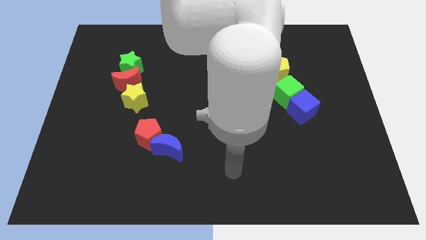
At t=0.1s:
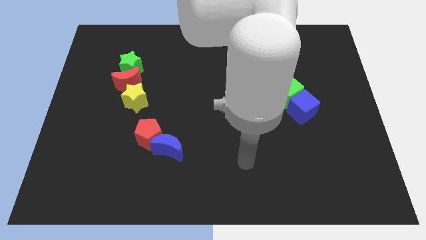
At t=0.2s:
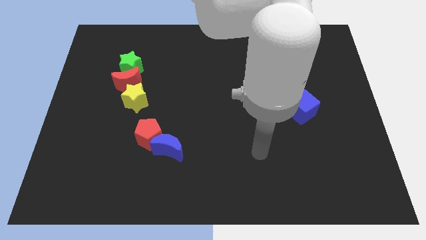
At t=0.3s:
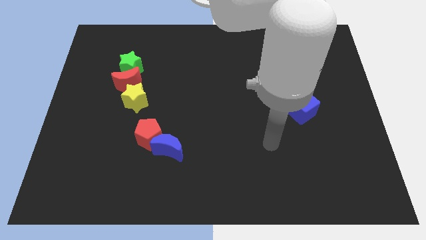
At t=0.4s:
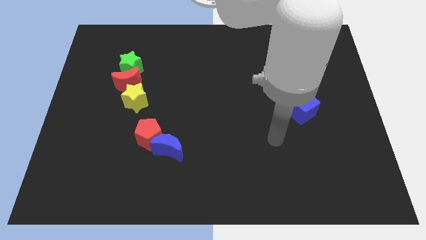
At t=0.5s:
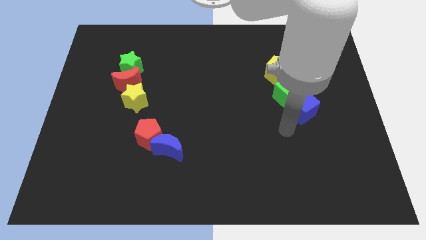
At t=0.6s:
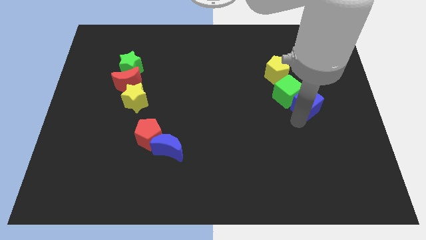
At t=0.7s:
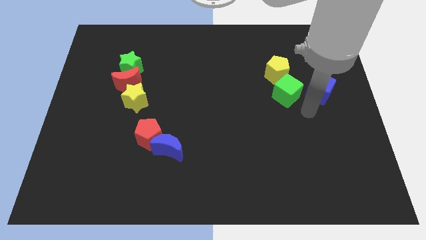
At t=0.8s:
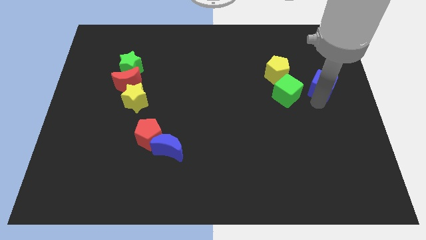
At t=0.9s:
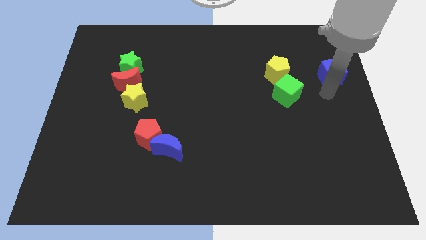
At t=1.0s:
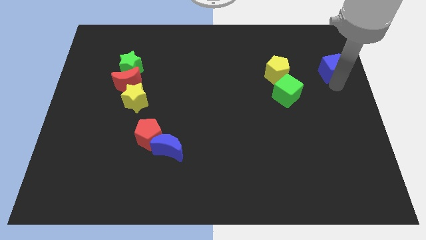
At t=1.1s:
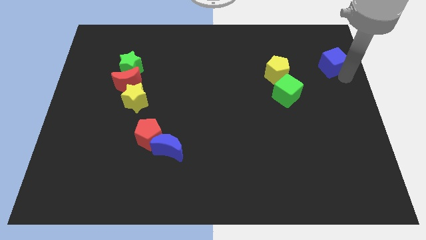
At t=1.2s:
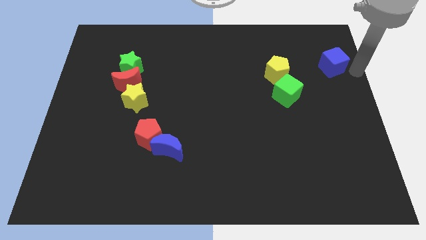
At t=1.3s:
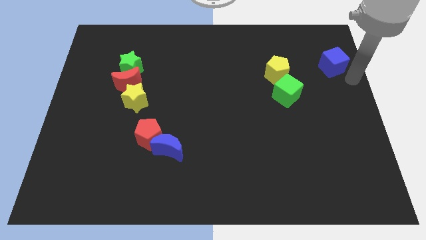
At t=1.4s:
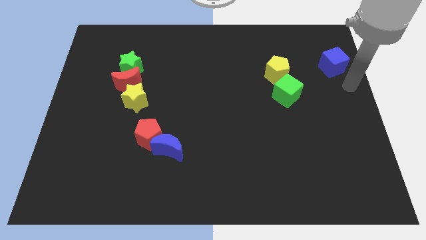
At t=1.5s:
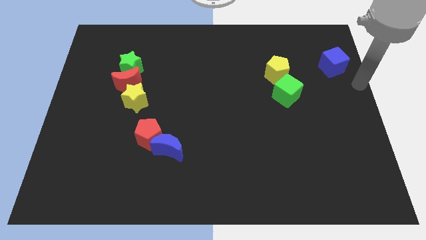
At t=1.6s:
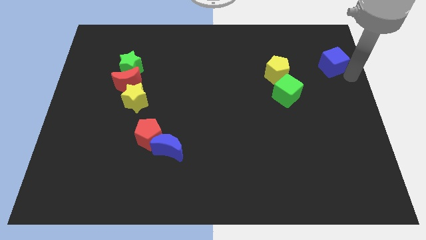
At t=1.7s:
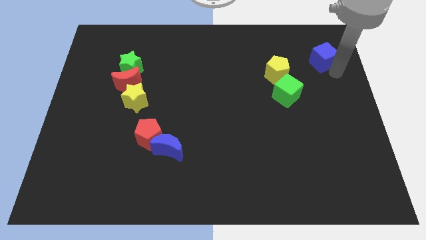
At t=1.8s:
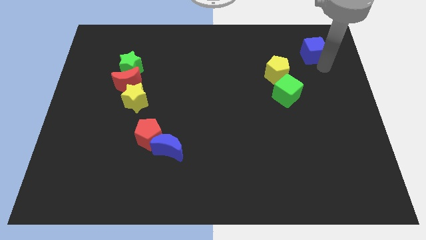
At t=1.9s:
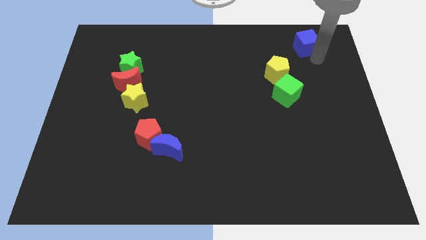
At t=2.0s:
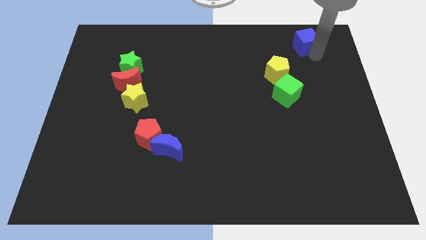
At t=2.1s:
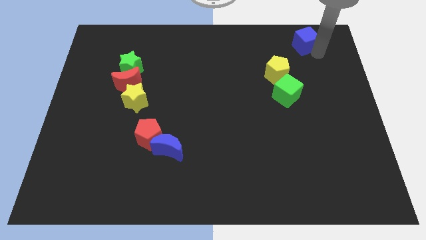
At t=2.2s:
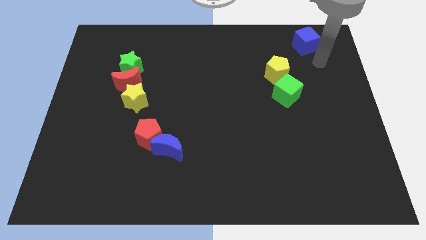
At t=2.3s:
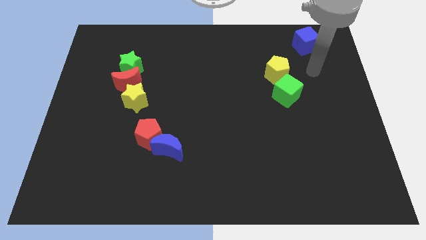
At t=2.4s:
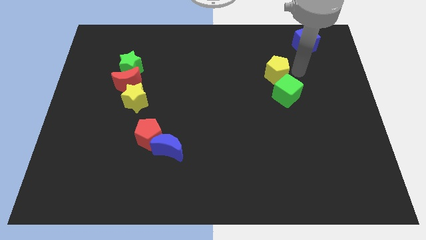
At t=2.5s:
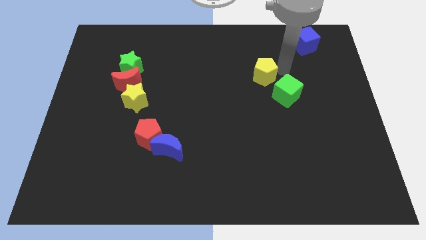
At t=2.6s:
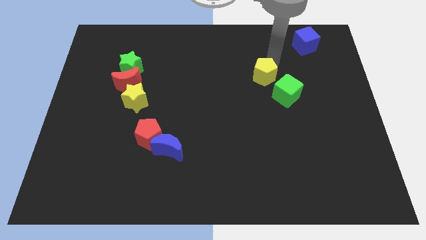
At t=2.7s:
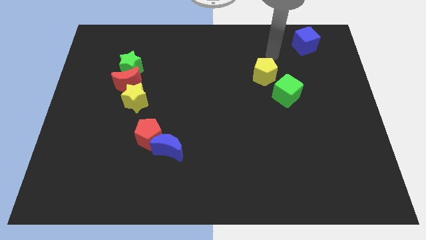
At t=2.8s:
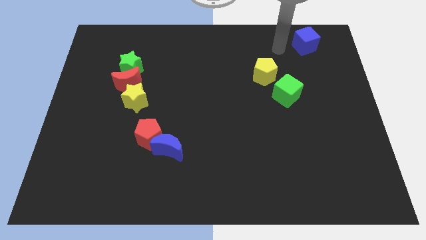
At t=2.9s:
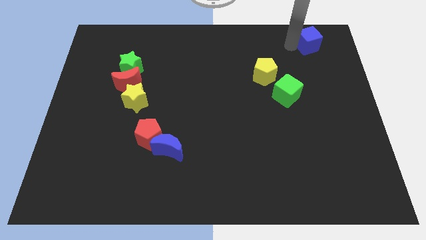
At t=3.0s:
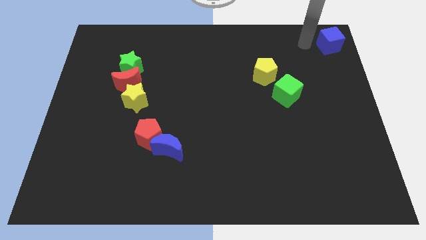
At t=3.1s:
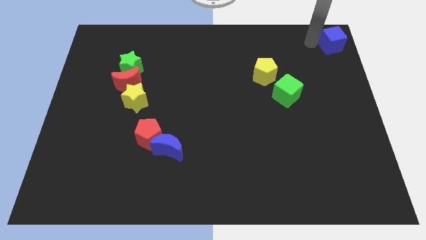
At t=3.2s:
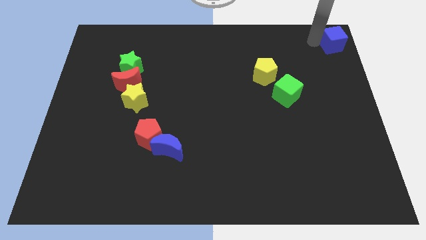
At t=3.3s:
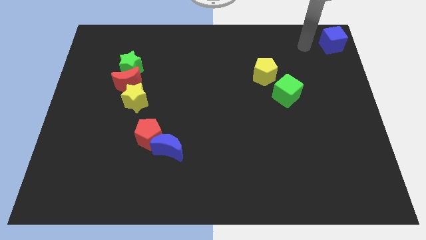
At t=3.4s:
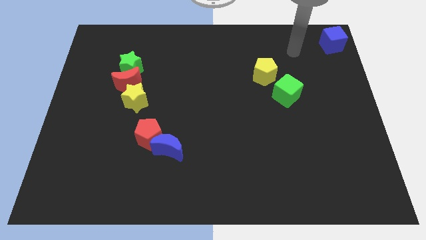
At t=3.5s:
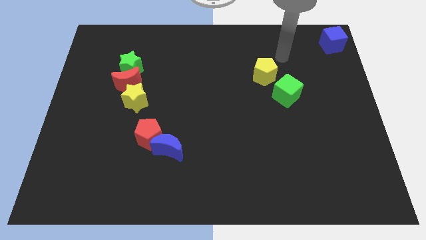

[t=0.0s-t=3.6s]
push the blue cube to the top right side of the board

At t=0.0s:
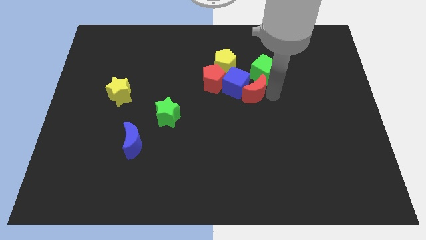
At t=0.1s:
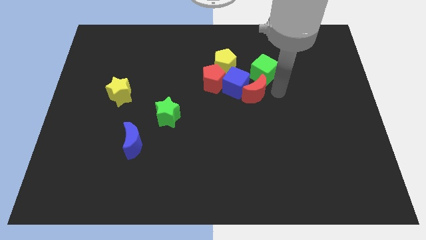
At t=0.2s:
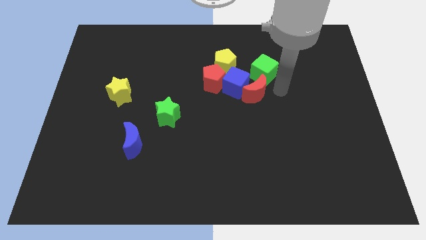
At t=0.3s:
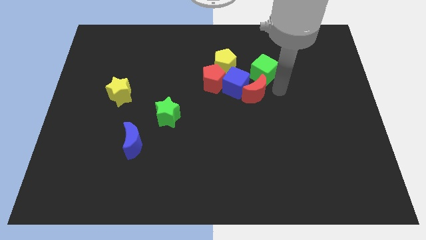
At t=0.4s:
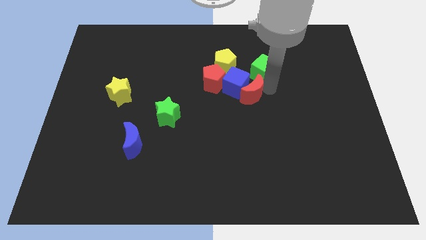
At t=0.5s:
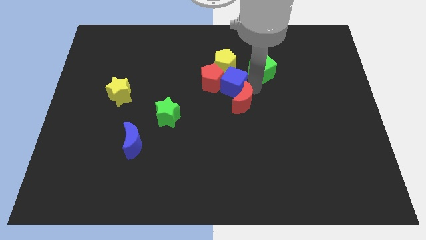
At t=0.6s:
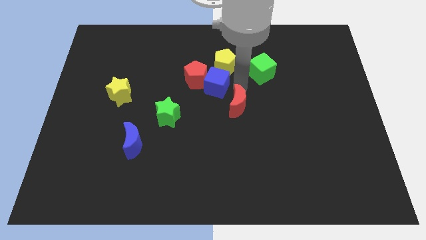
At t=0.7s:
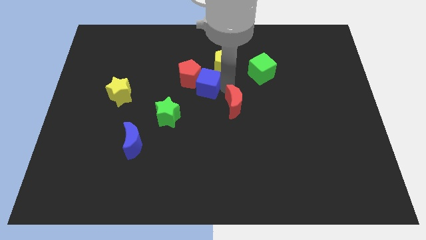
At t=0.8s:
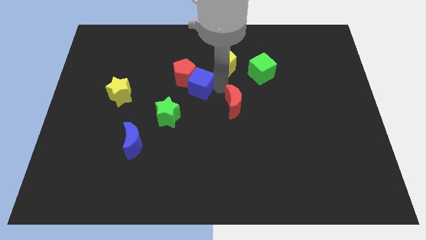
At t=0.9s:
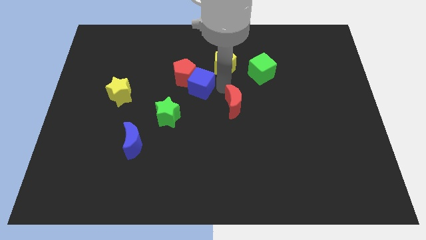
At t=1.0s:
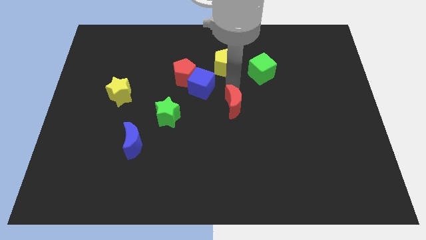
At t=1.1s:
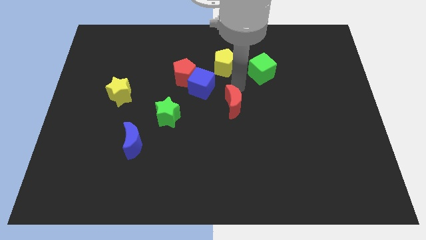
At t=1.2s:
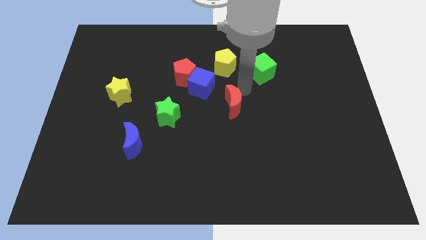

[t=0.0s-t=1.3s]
separate the blue cube and the red moon

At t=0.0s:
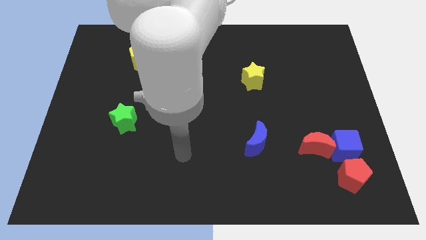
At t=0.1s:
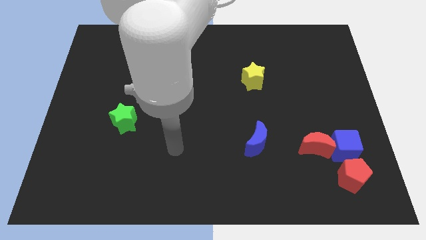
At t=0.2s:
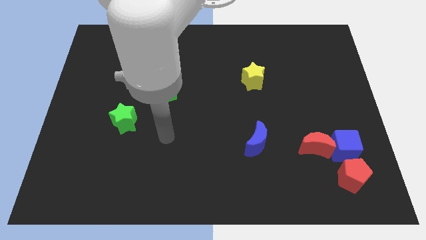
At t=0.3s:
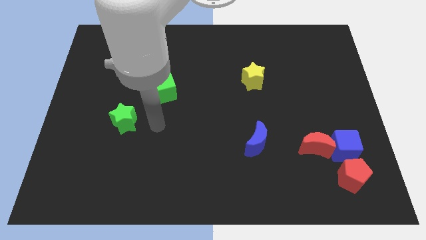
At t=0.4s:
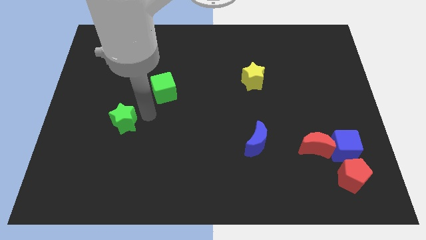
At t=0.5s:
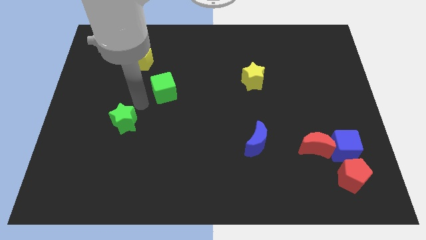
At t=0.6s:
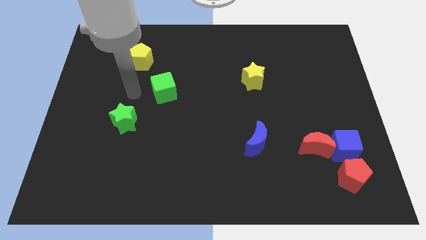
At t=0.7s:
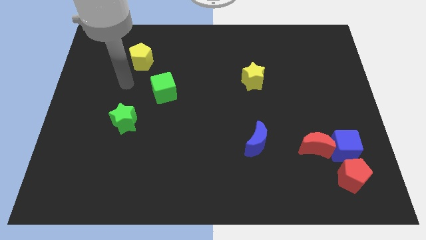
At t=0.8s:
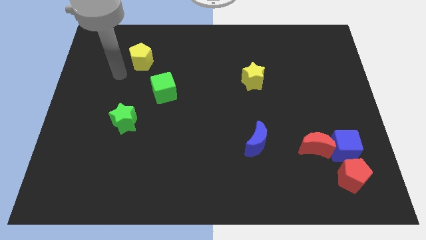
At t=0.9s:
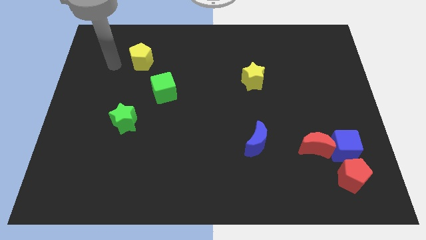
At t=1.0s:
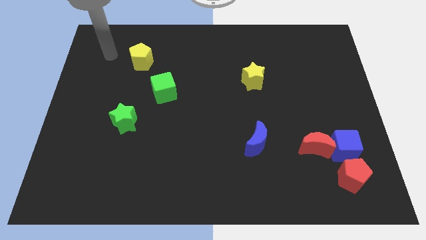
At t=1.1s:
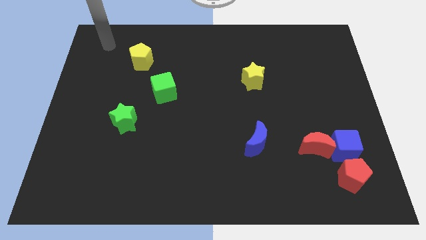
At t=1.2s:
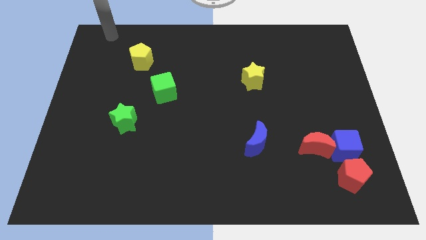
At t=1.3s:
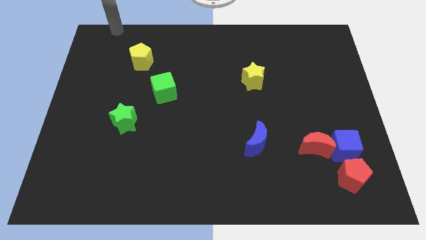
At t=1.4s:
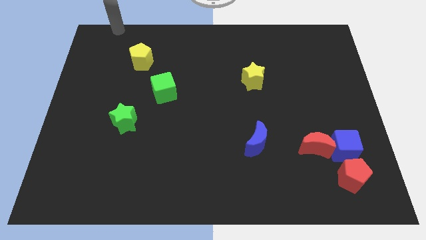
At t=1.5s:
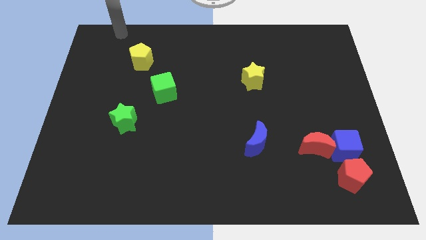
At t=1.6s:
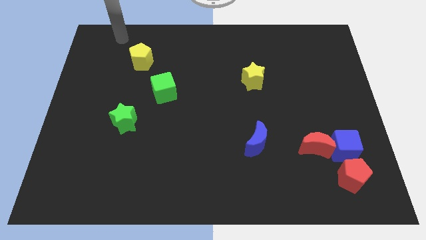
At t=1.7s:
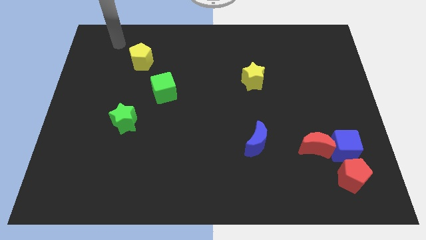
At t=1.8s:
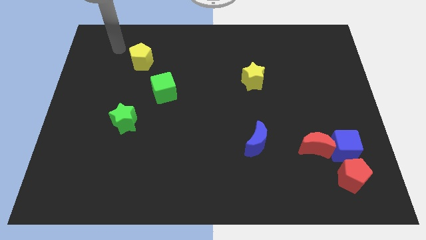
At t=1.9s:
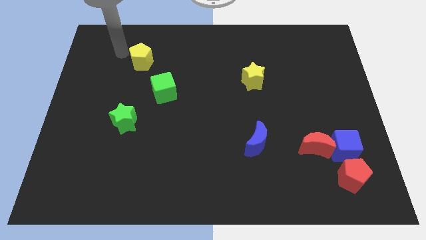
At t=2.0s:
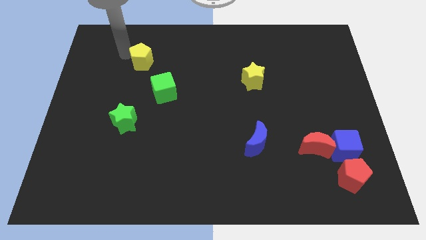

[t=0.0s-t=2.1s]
place the arm left to the yellow pentagon

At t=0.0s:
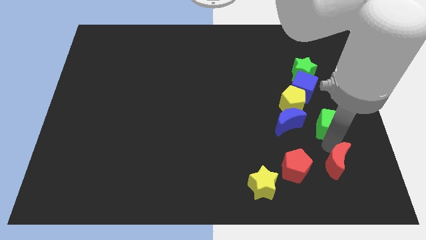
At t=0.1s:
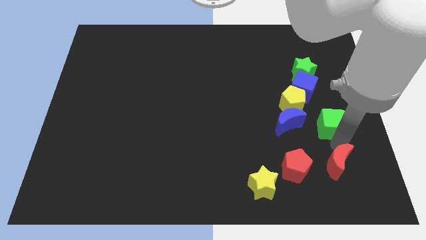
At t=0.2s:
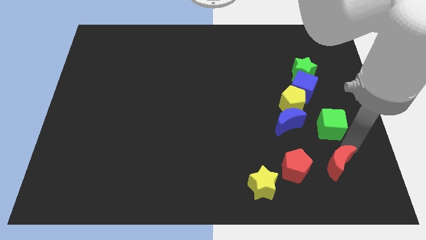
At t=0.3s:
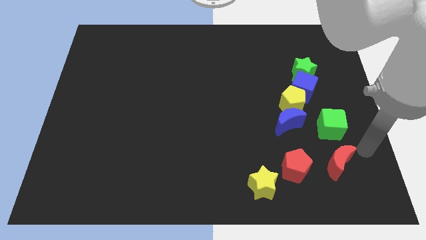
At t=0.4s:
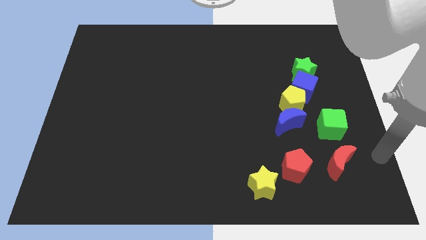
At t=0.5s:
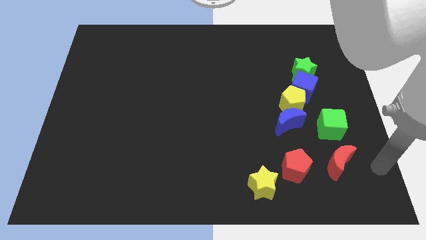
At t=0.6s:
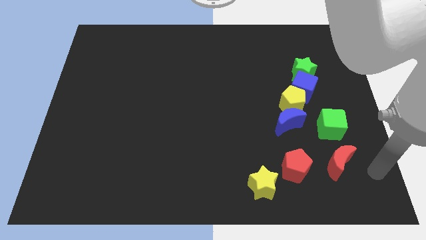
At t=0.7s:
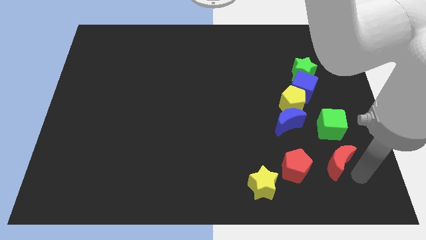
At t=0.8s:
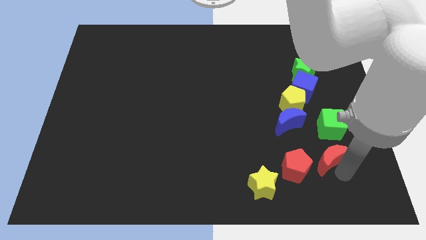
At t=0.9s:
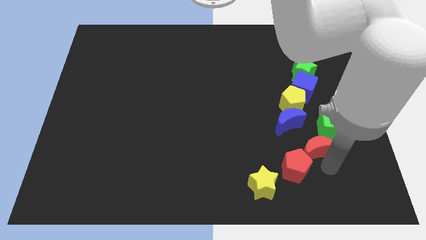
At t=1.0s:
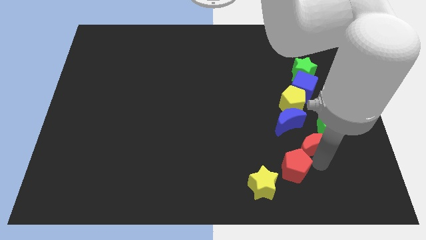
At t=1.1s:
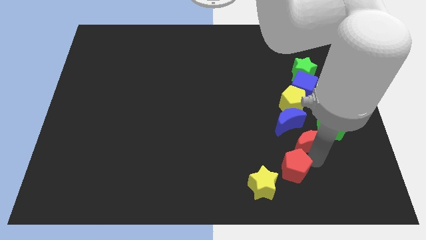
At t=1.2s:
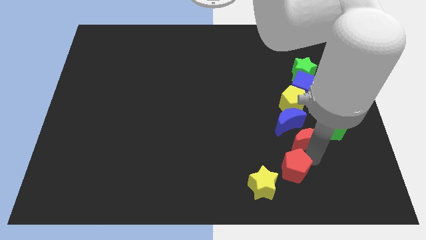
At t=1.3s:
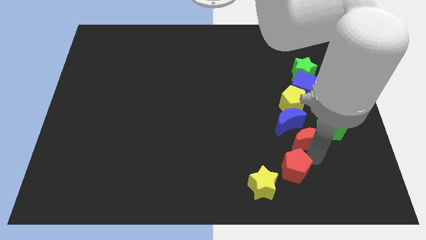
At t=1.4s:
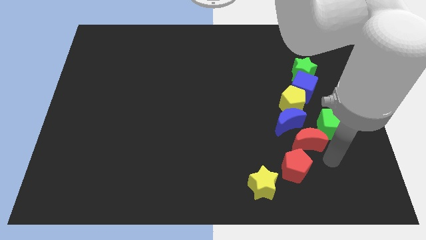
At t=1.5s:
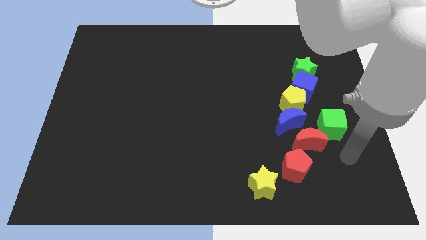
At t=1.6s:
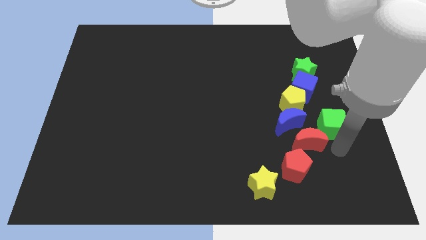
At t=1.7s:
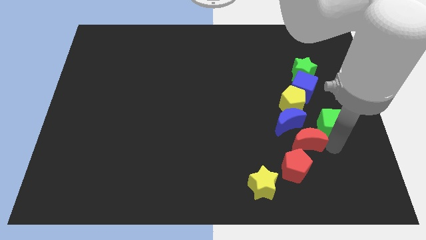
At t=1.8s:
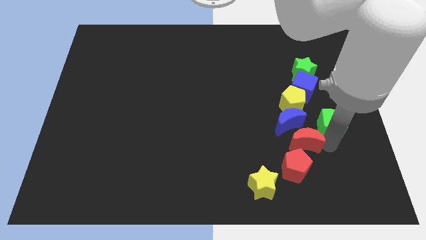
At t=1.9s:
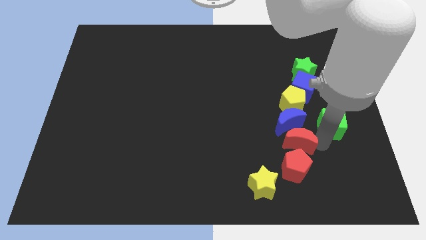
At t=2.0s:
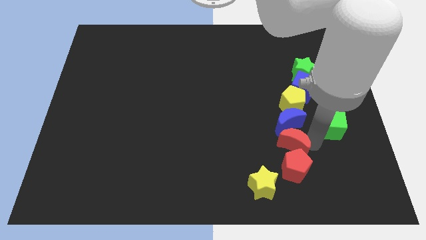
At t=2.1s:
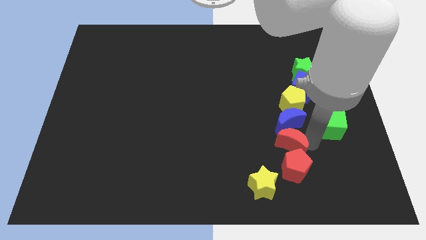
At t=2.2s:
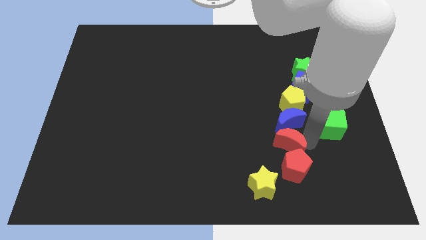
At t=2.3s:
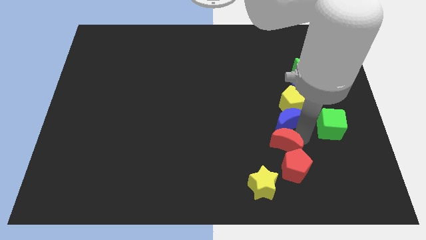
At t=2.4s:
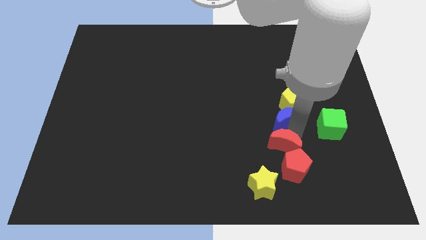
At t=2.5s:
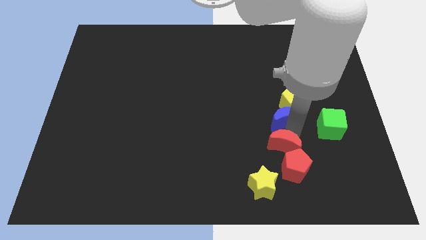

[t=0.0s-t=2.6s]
place the red moon between the blue moon and red pentagon
